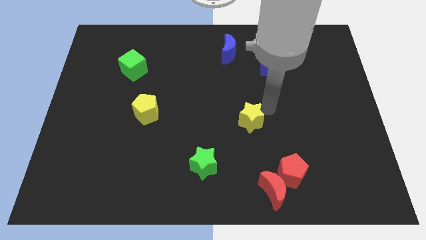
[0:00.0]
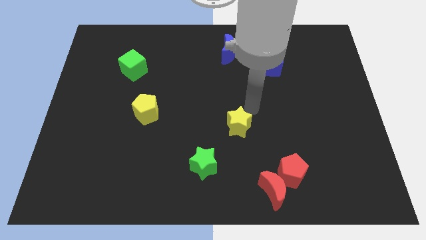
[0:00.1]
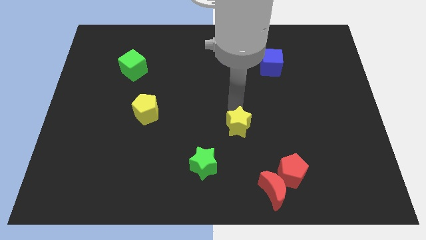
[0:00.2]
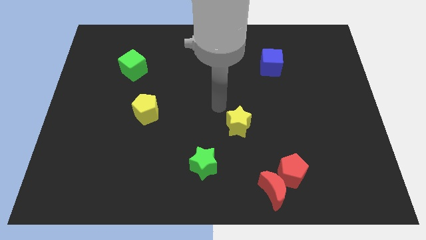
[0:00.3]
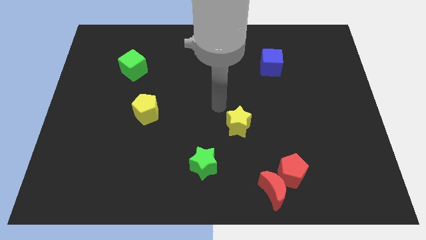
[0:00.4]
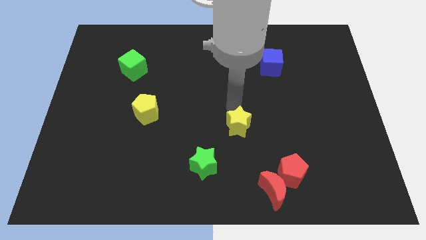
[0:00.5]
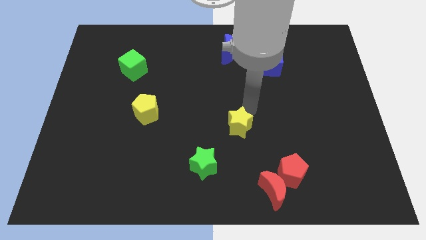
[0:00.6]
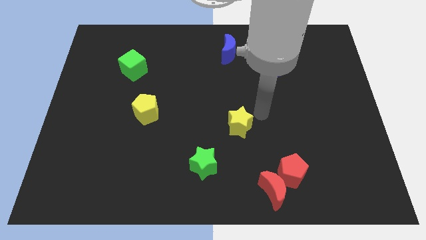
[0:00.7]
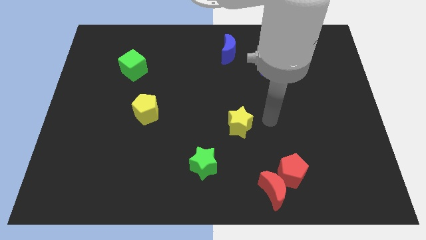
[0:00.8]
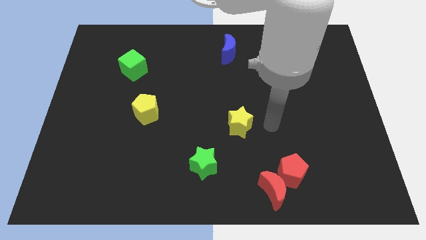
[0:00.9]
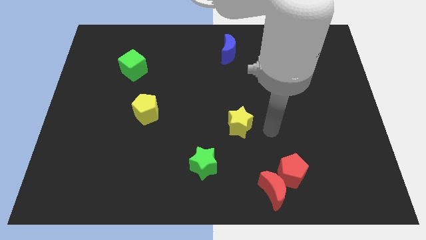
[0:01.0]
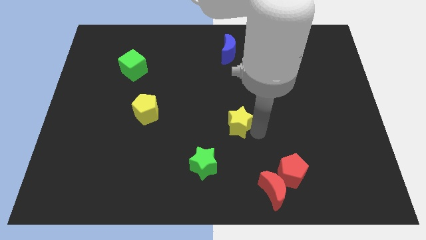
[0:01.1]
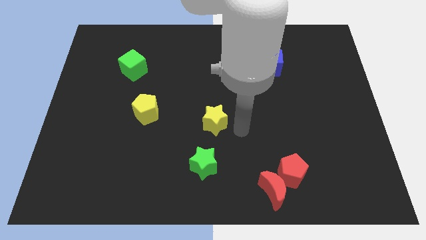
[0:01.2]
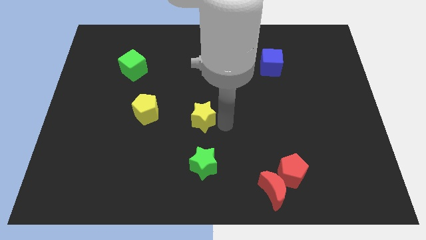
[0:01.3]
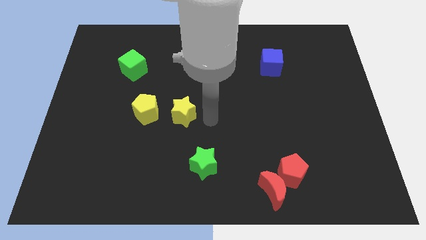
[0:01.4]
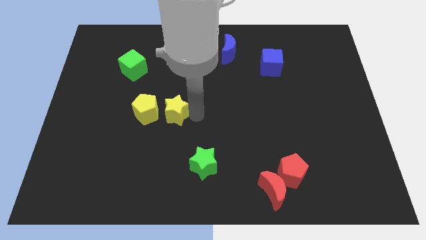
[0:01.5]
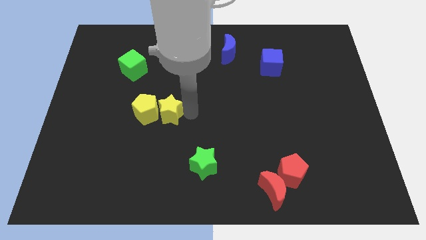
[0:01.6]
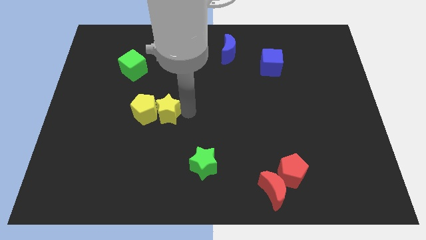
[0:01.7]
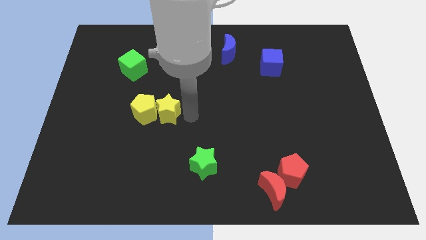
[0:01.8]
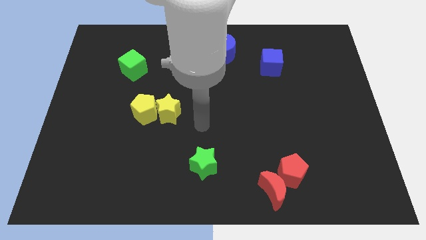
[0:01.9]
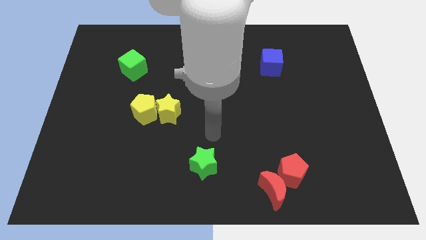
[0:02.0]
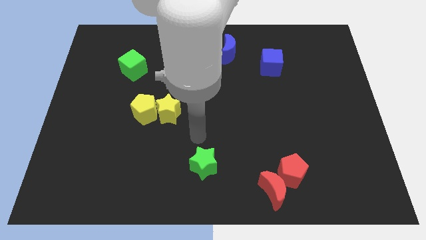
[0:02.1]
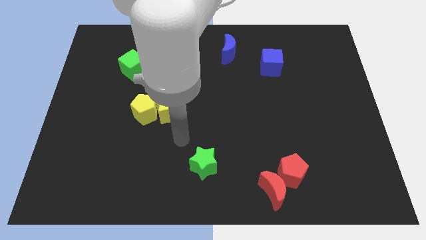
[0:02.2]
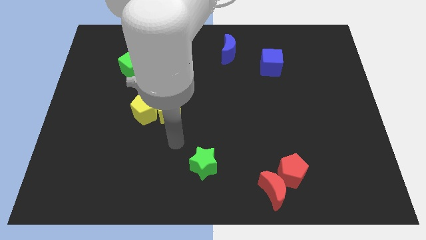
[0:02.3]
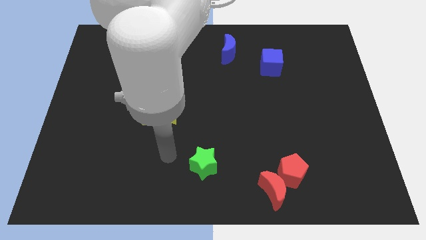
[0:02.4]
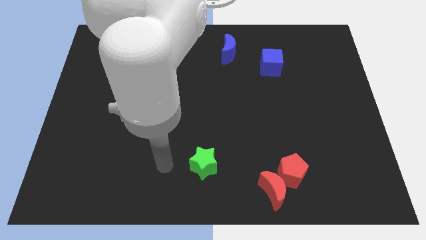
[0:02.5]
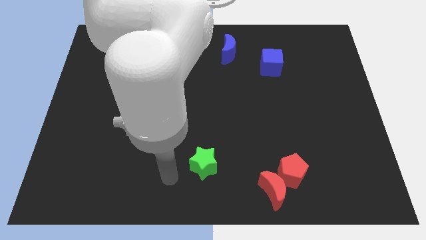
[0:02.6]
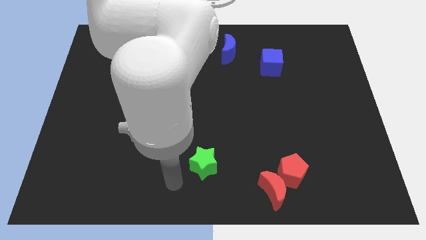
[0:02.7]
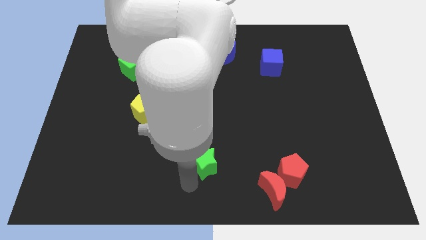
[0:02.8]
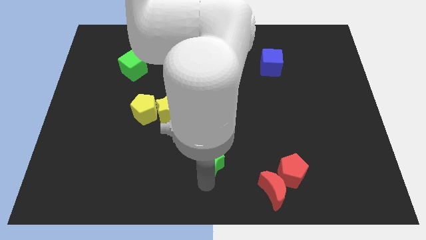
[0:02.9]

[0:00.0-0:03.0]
push the yellow star into the yellow pentagon

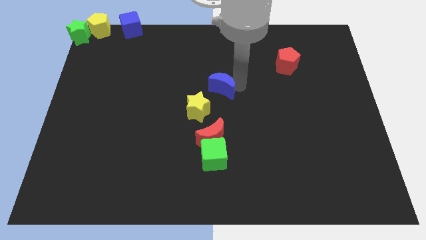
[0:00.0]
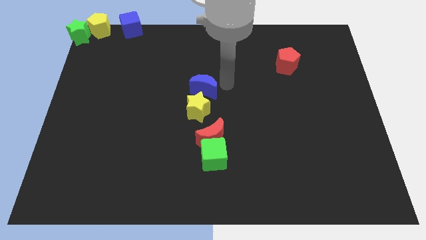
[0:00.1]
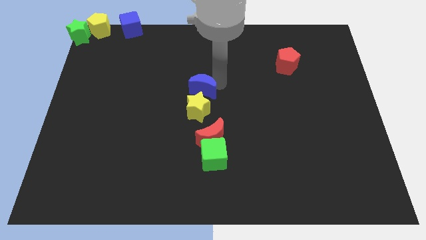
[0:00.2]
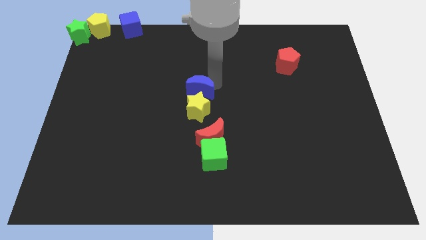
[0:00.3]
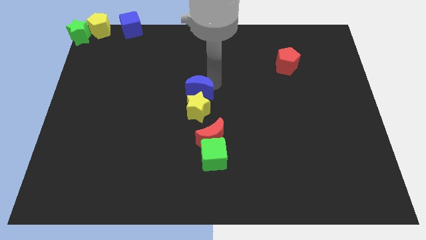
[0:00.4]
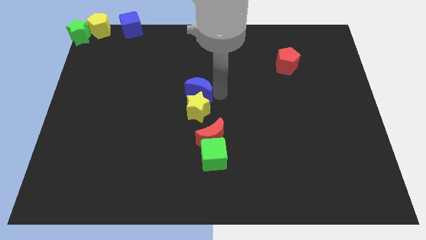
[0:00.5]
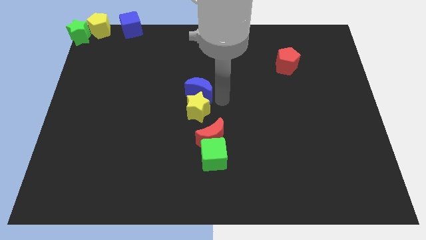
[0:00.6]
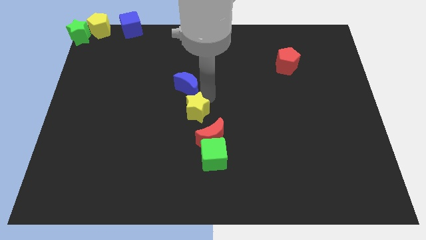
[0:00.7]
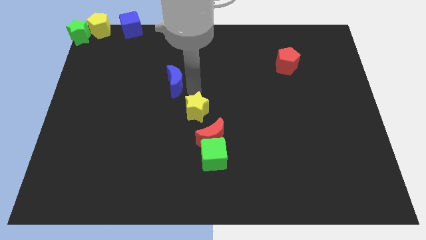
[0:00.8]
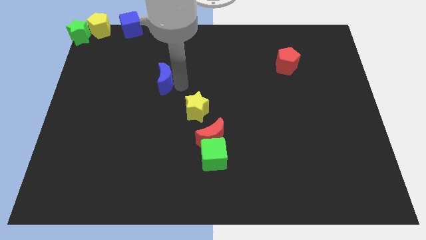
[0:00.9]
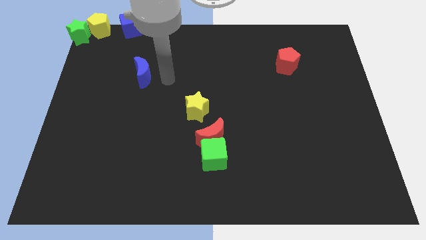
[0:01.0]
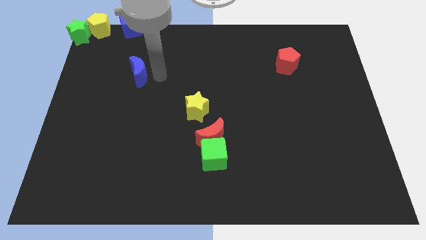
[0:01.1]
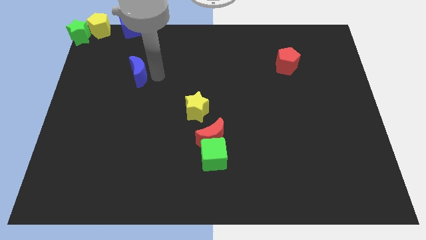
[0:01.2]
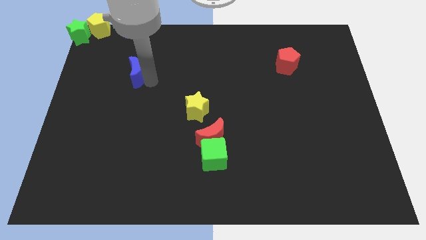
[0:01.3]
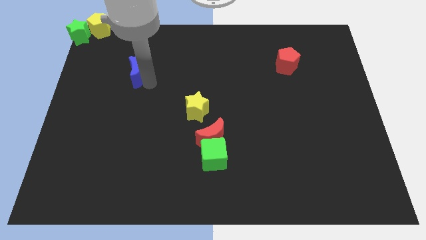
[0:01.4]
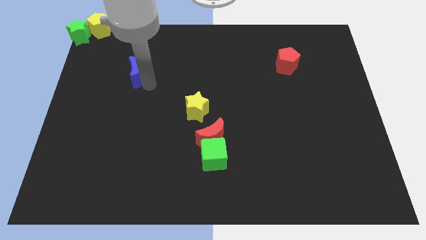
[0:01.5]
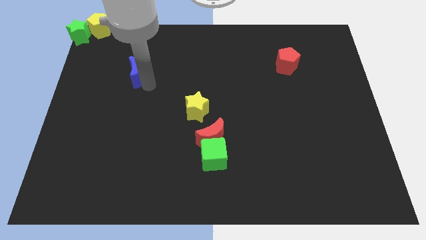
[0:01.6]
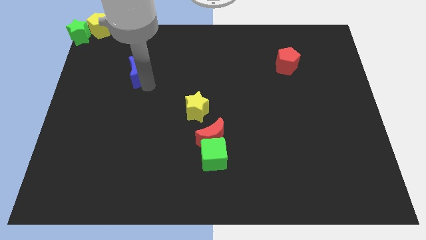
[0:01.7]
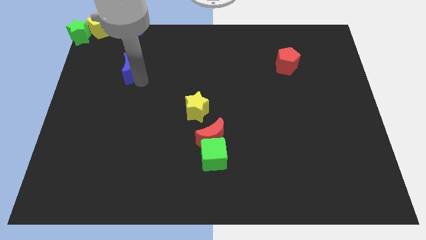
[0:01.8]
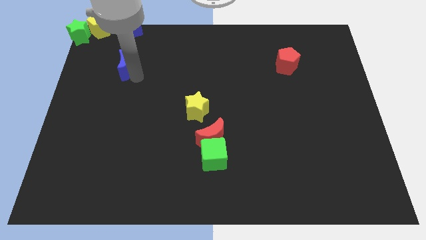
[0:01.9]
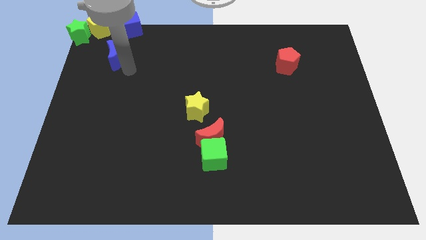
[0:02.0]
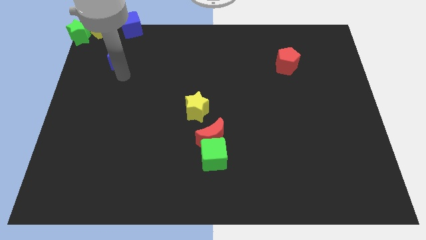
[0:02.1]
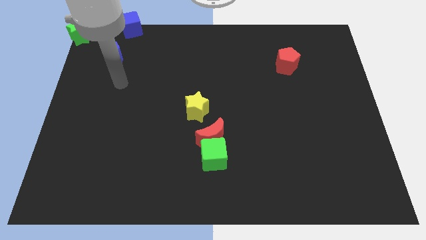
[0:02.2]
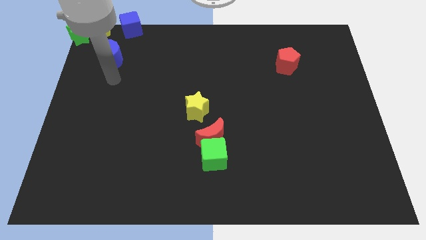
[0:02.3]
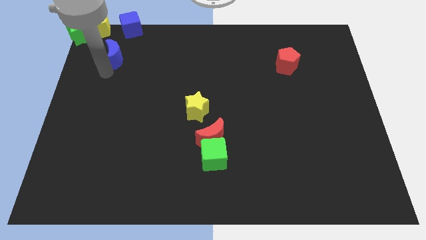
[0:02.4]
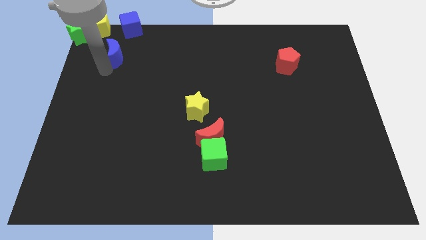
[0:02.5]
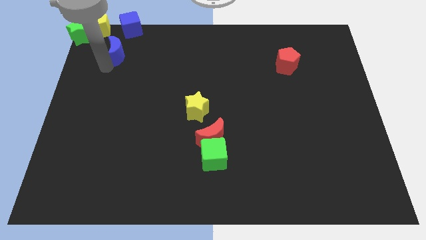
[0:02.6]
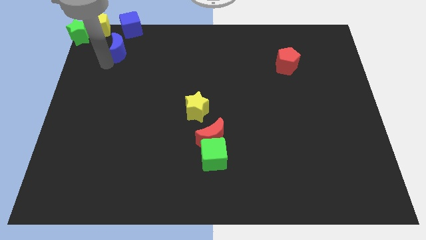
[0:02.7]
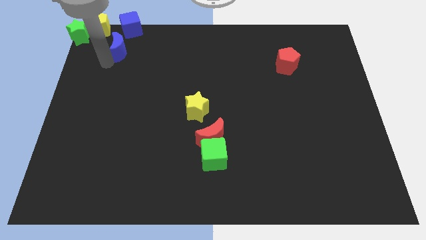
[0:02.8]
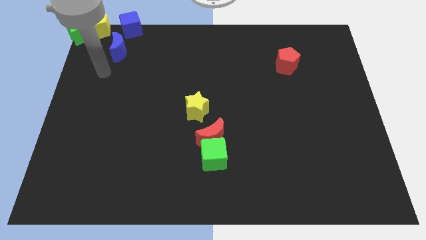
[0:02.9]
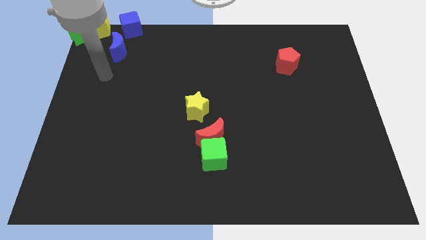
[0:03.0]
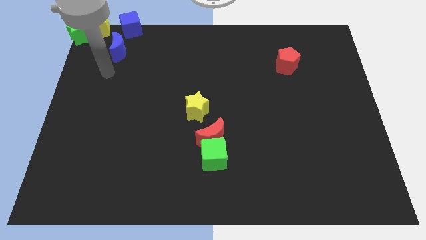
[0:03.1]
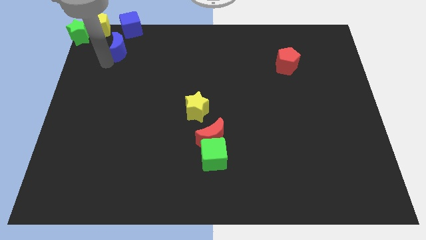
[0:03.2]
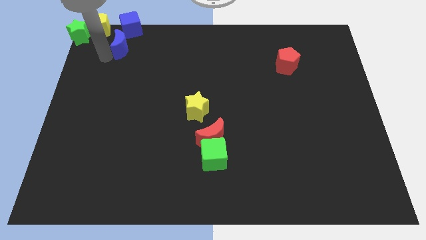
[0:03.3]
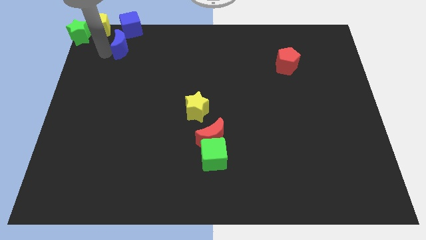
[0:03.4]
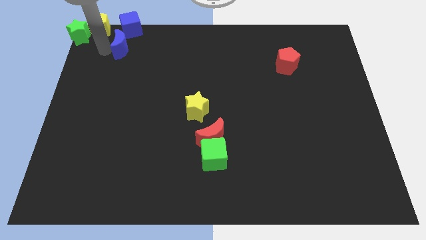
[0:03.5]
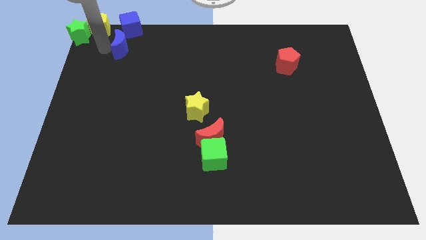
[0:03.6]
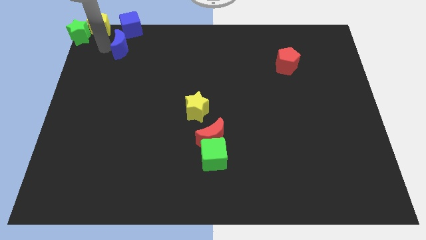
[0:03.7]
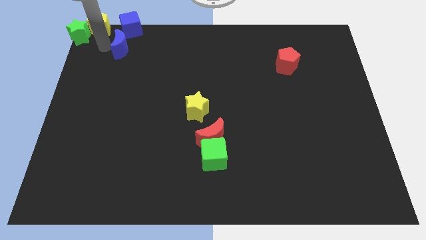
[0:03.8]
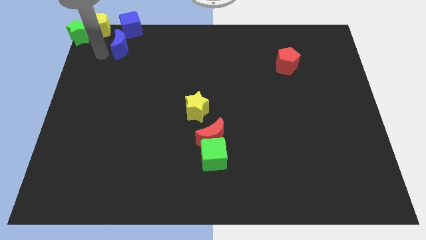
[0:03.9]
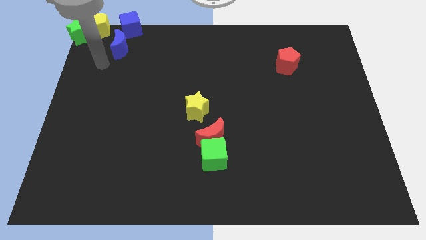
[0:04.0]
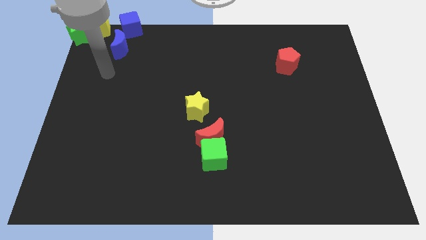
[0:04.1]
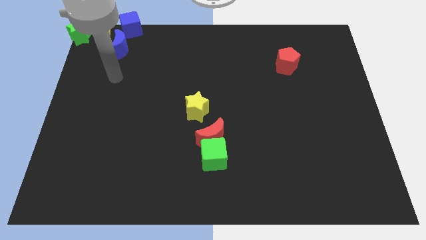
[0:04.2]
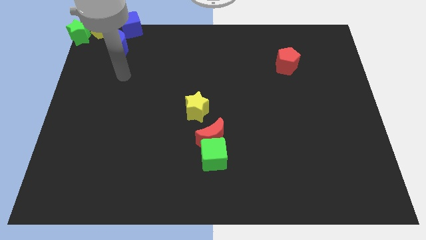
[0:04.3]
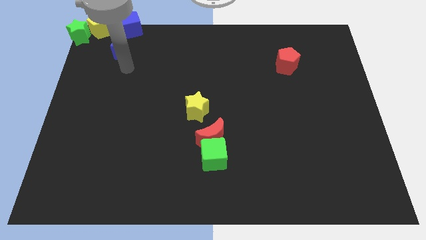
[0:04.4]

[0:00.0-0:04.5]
move the blue crescent to the bottom of the blue cube

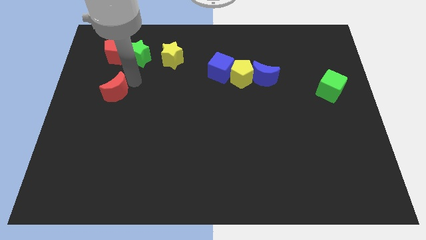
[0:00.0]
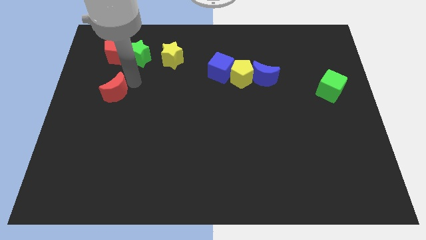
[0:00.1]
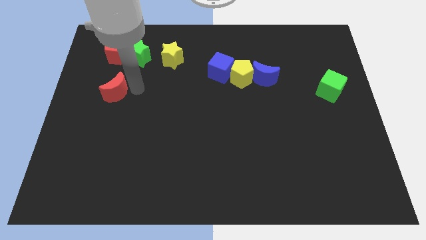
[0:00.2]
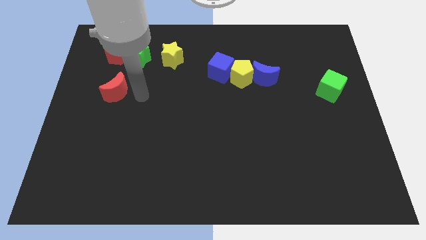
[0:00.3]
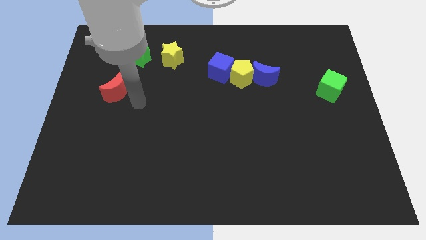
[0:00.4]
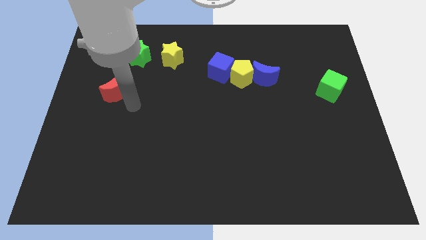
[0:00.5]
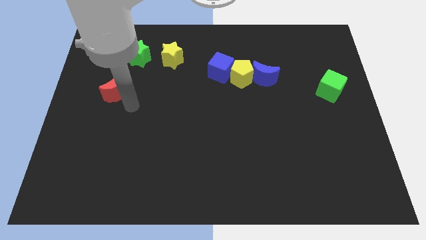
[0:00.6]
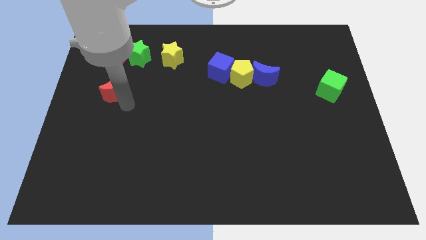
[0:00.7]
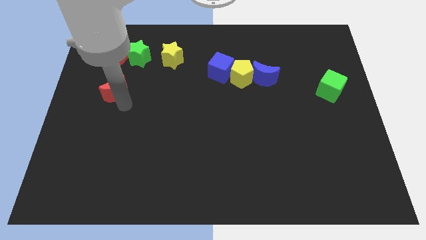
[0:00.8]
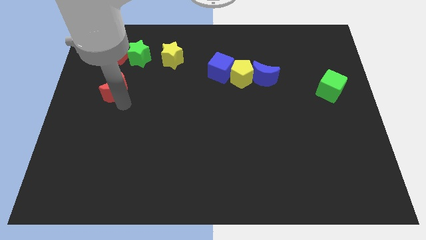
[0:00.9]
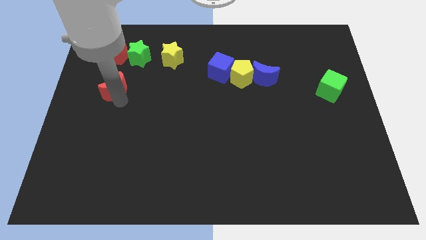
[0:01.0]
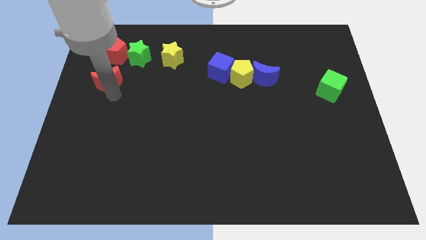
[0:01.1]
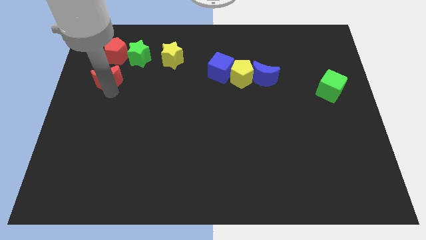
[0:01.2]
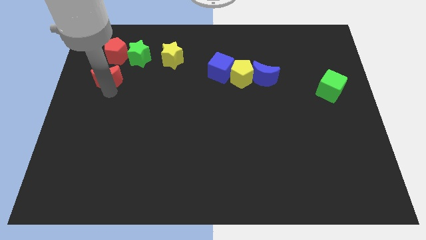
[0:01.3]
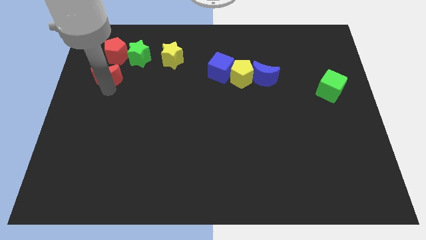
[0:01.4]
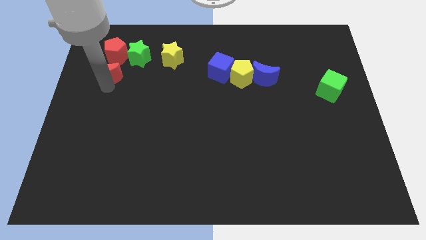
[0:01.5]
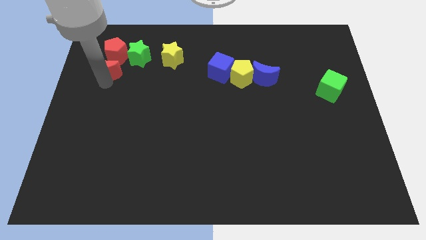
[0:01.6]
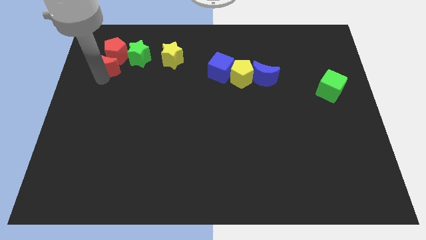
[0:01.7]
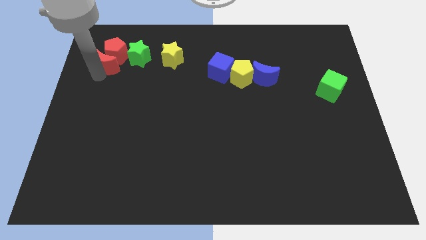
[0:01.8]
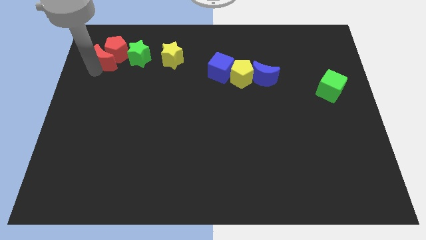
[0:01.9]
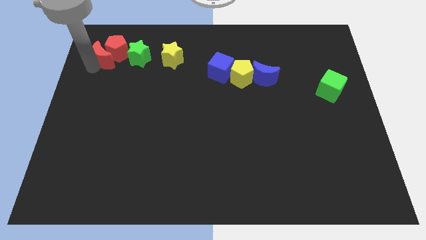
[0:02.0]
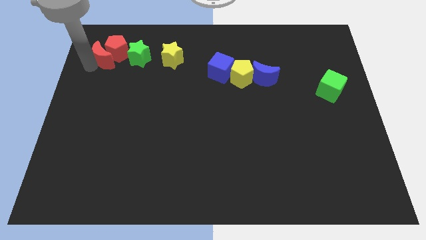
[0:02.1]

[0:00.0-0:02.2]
push the red moon into the red pentagon
